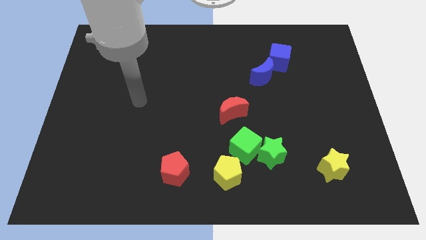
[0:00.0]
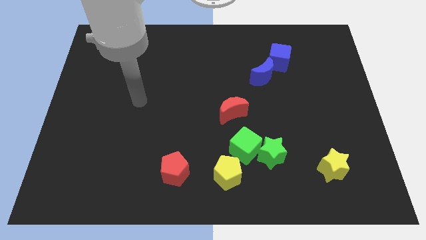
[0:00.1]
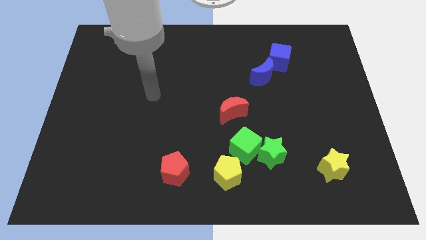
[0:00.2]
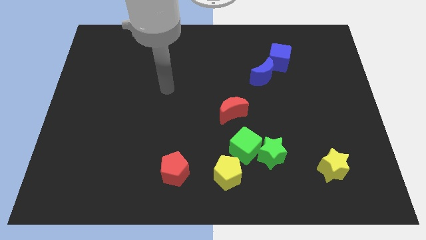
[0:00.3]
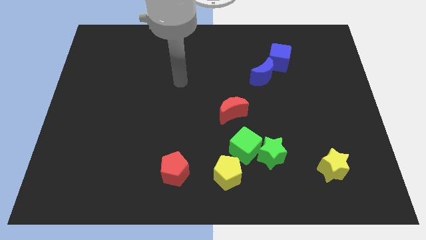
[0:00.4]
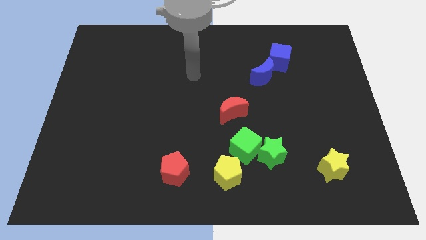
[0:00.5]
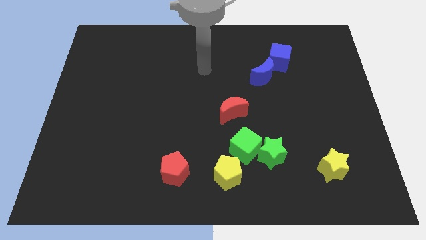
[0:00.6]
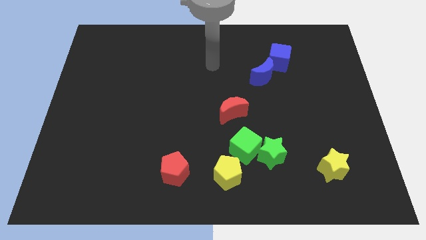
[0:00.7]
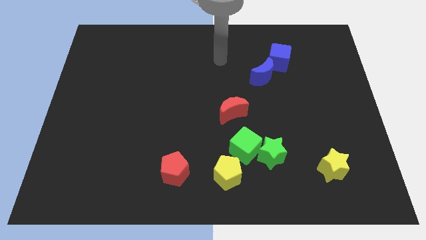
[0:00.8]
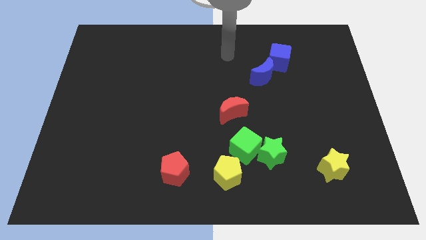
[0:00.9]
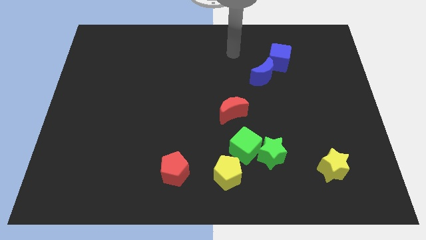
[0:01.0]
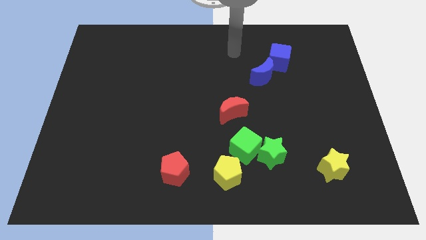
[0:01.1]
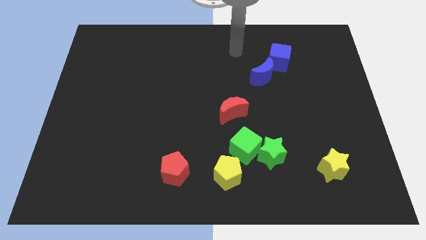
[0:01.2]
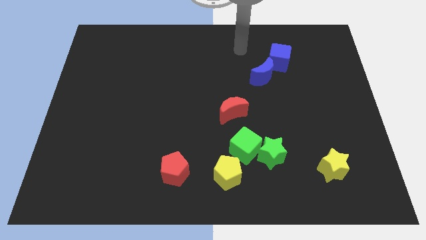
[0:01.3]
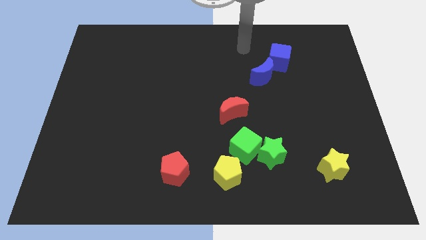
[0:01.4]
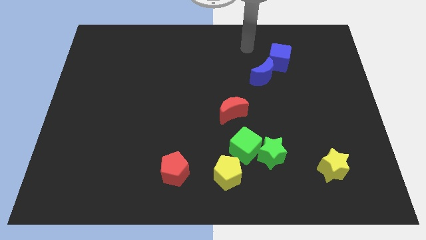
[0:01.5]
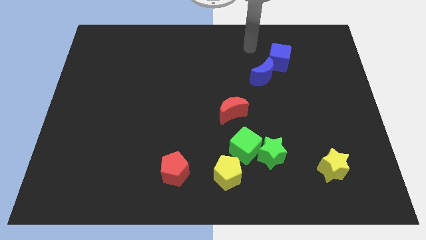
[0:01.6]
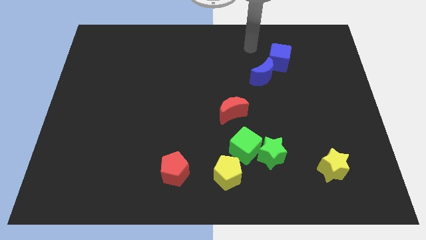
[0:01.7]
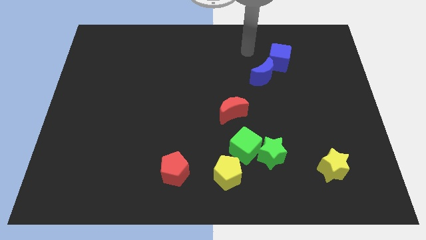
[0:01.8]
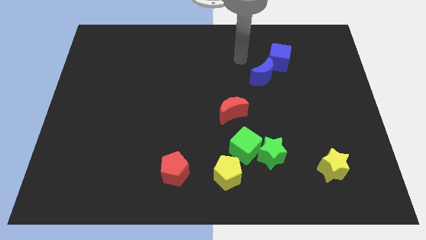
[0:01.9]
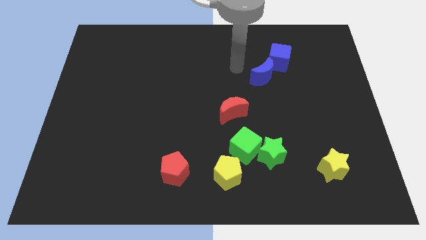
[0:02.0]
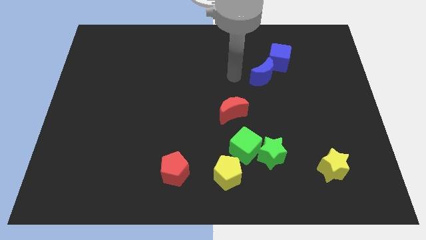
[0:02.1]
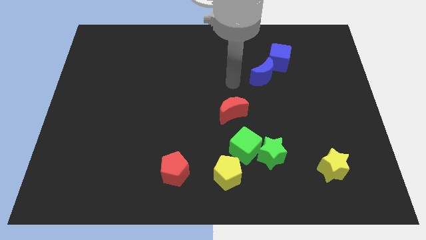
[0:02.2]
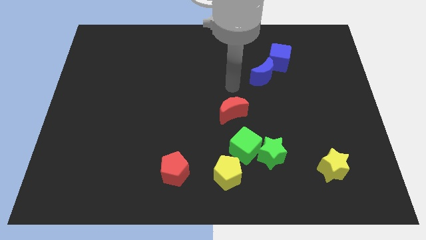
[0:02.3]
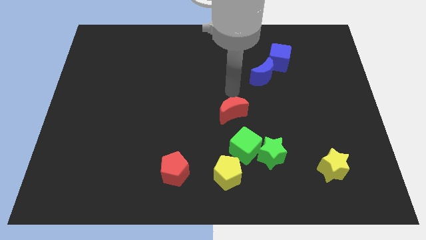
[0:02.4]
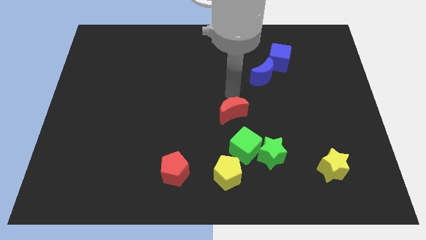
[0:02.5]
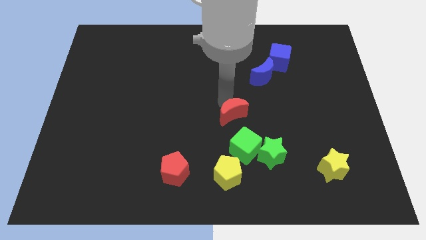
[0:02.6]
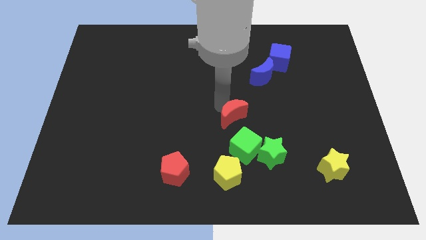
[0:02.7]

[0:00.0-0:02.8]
touch the red crescent with the arm

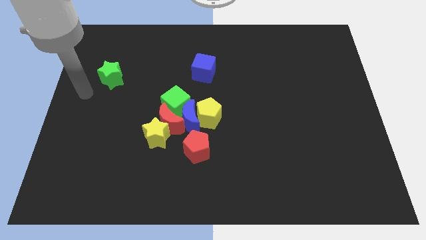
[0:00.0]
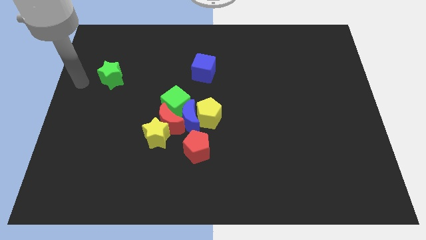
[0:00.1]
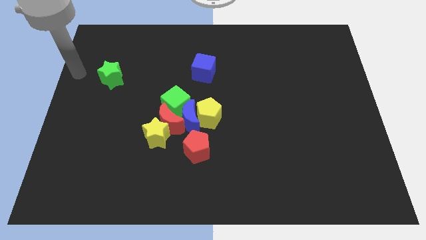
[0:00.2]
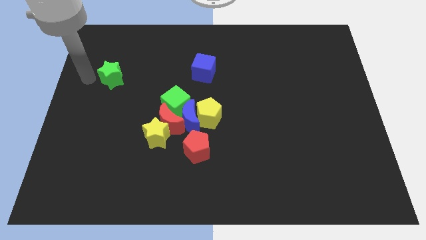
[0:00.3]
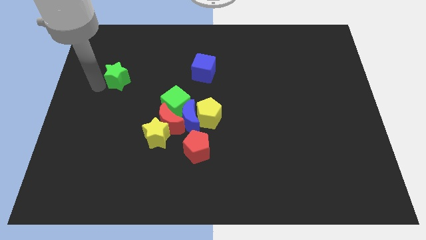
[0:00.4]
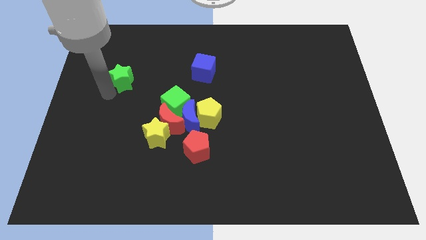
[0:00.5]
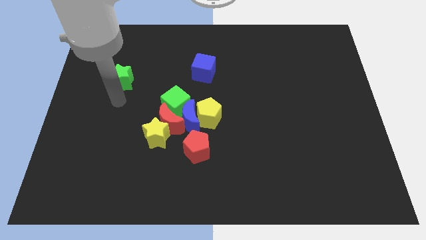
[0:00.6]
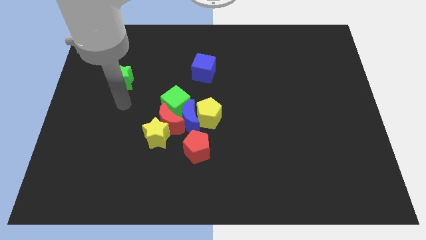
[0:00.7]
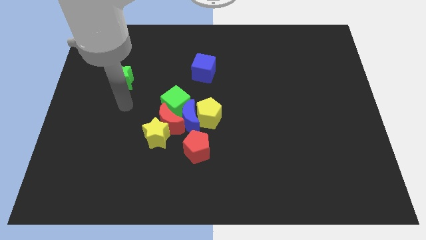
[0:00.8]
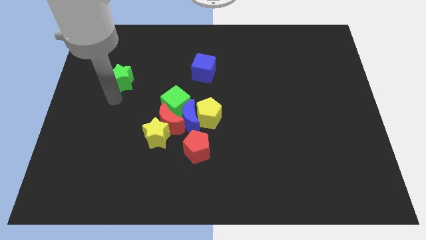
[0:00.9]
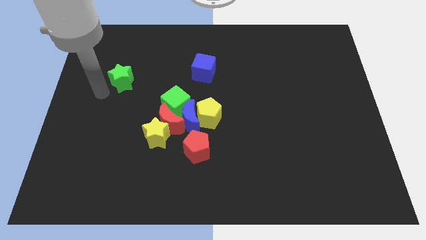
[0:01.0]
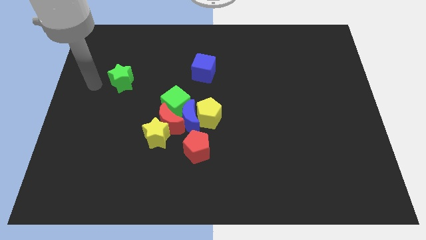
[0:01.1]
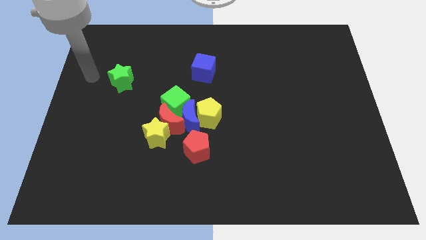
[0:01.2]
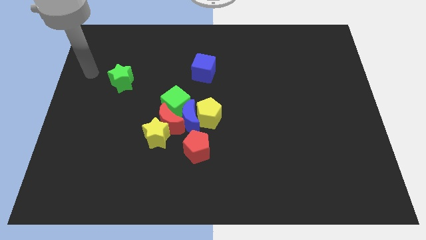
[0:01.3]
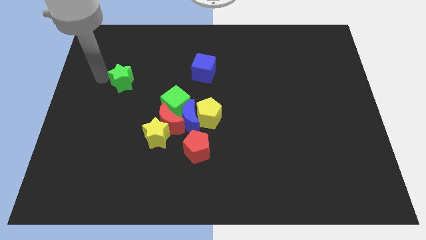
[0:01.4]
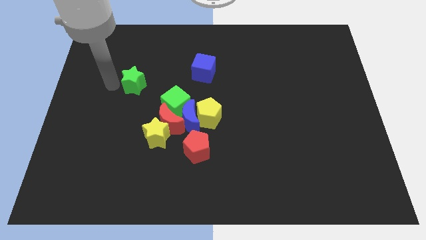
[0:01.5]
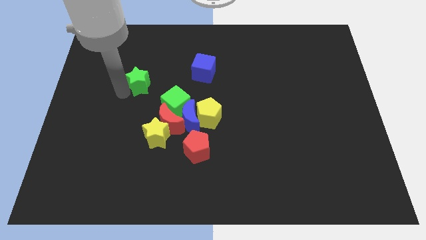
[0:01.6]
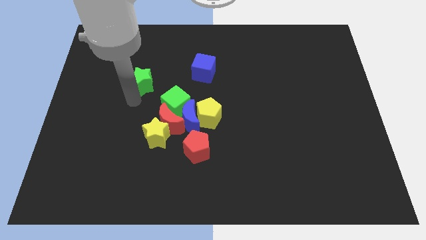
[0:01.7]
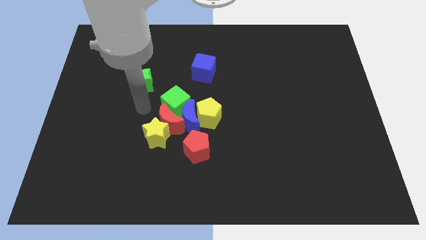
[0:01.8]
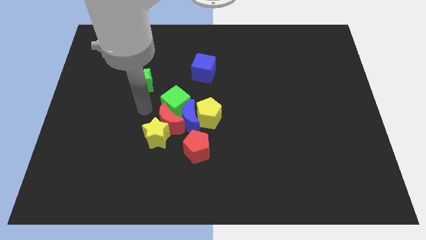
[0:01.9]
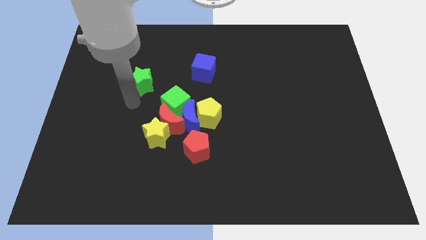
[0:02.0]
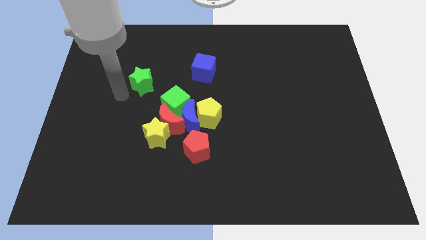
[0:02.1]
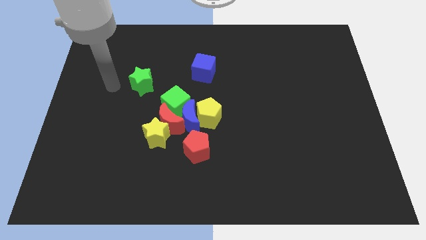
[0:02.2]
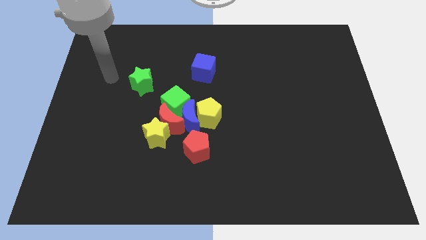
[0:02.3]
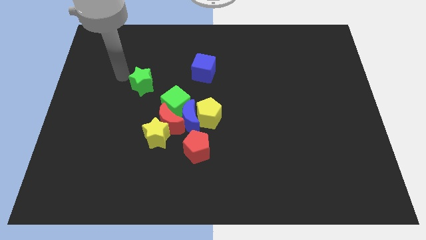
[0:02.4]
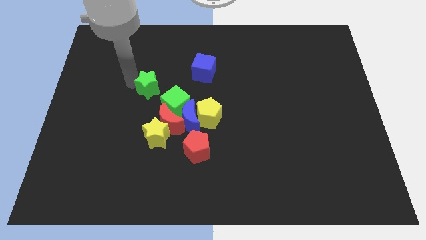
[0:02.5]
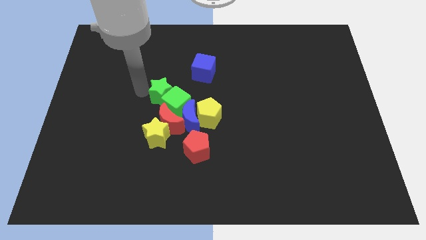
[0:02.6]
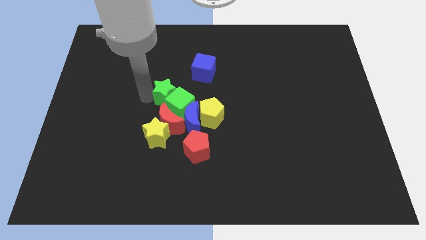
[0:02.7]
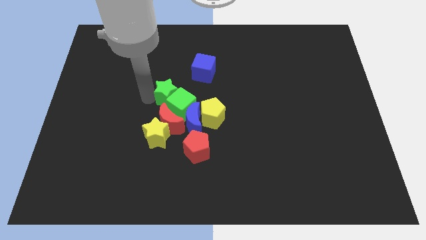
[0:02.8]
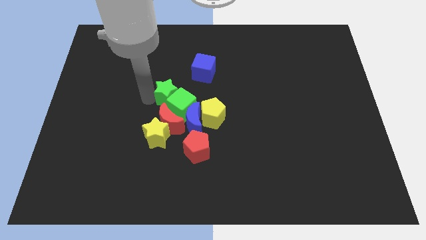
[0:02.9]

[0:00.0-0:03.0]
push the green star into the green cube

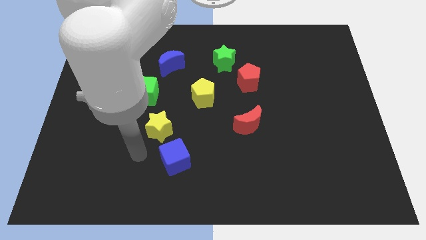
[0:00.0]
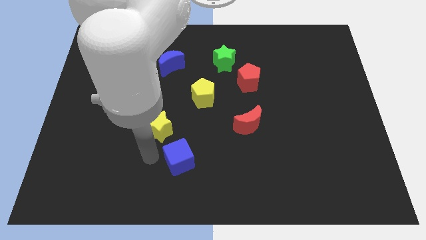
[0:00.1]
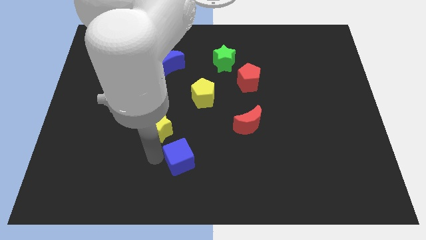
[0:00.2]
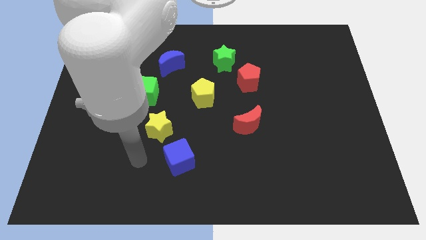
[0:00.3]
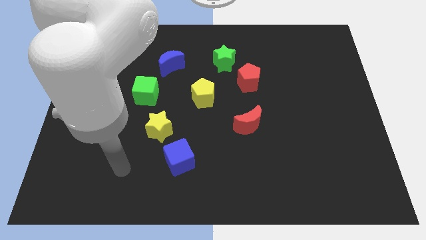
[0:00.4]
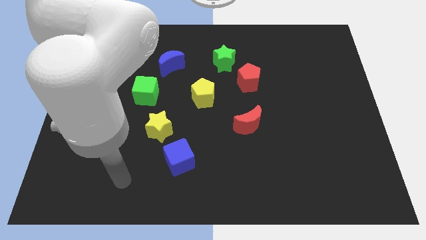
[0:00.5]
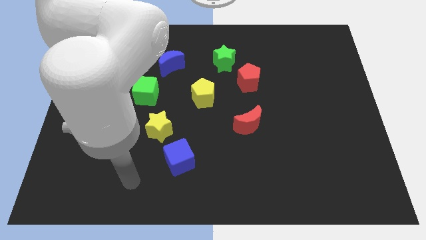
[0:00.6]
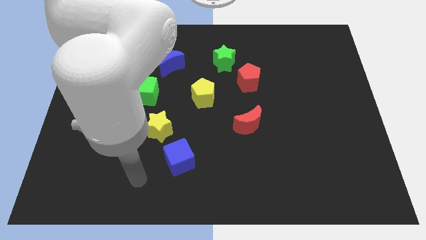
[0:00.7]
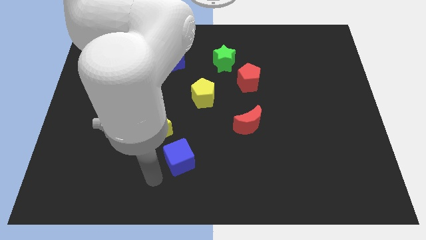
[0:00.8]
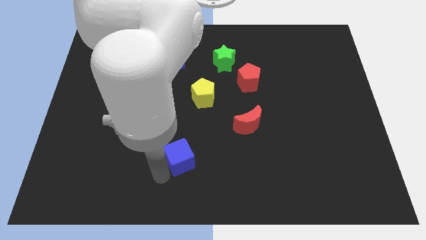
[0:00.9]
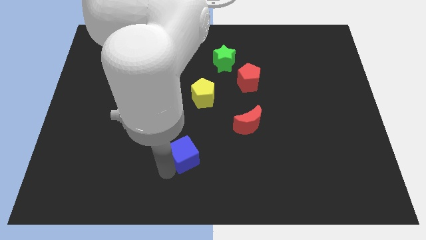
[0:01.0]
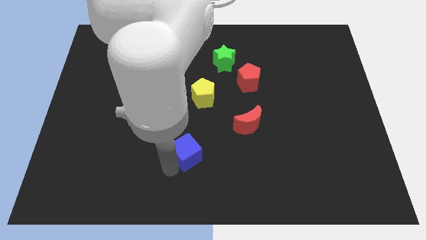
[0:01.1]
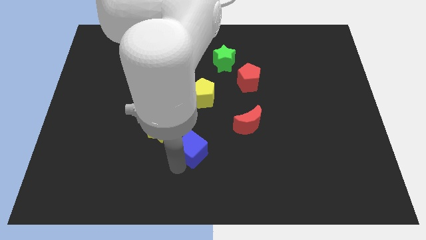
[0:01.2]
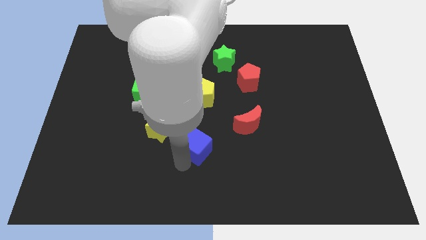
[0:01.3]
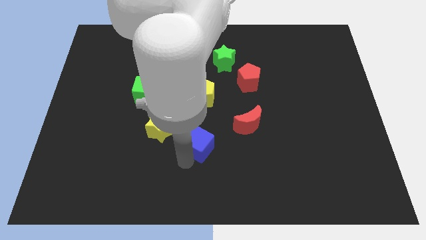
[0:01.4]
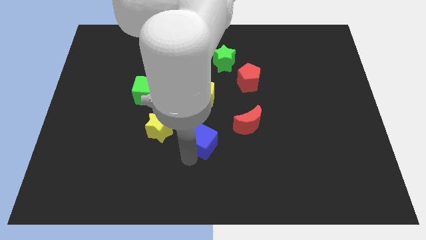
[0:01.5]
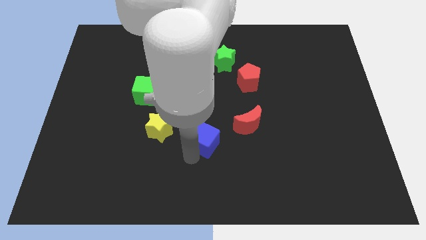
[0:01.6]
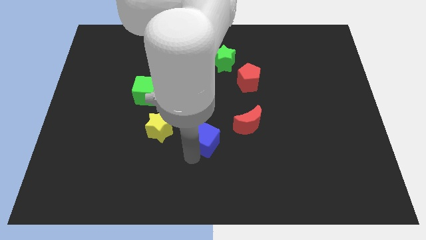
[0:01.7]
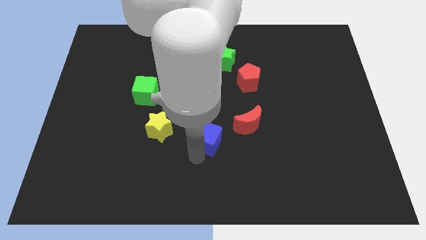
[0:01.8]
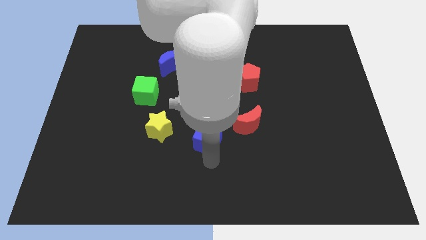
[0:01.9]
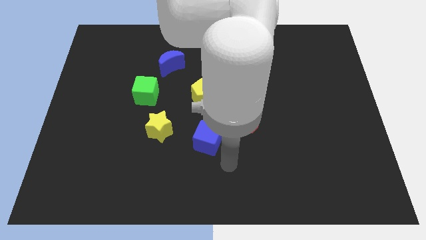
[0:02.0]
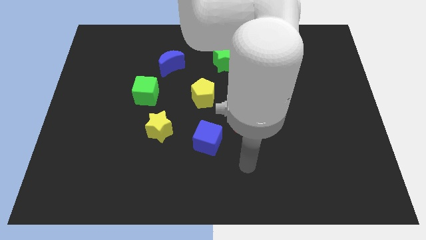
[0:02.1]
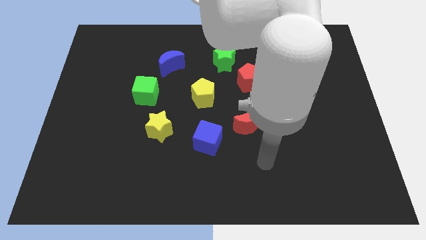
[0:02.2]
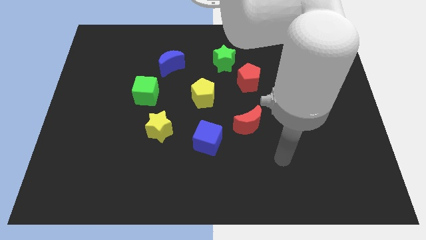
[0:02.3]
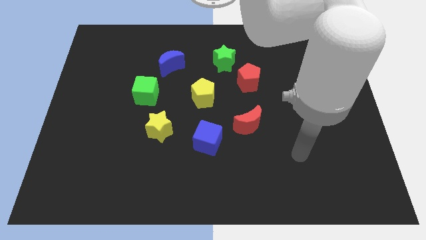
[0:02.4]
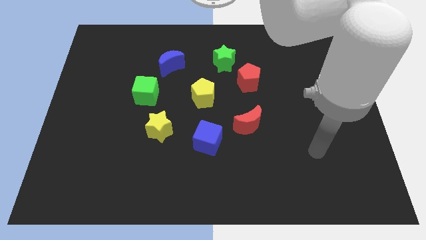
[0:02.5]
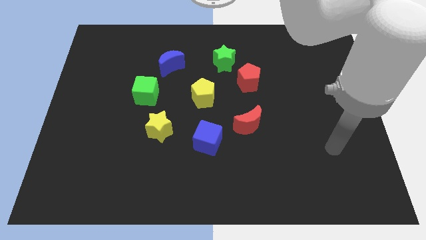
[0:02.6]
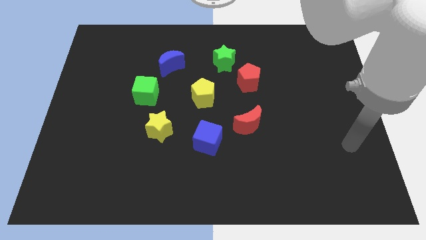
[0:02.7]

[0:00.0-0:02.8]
move the blue cube diagonally to the bottom left of the red moon

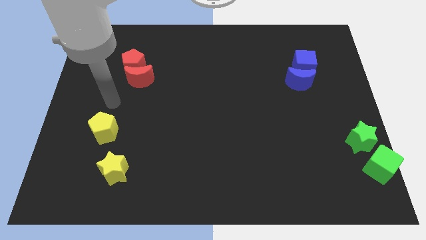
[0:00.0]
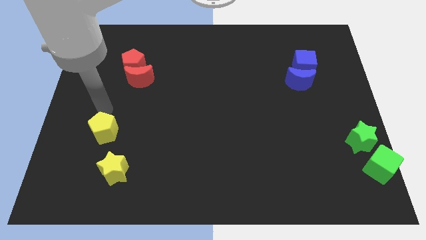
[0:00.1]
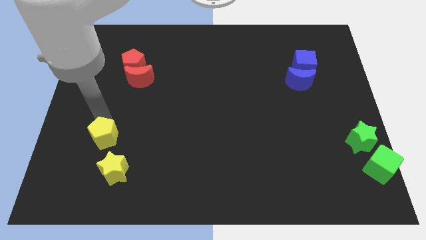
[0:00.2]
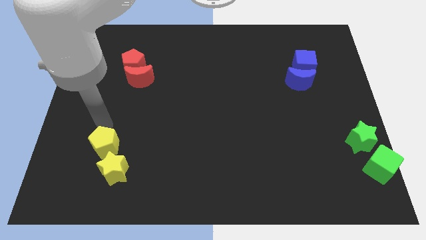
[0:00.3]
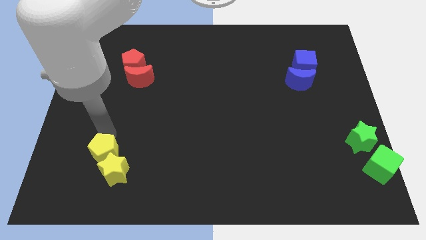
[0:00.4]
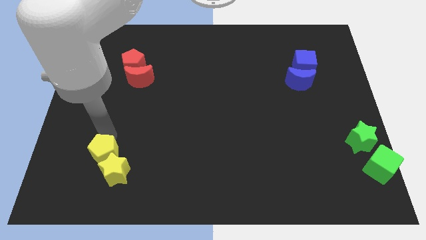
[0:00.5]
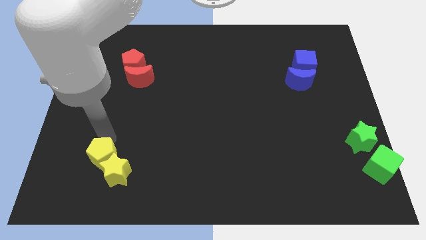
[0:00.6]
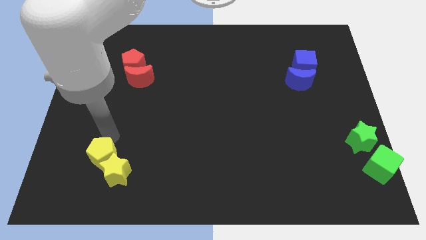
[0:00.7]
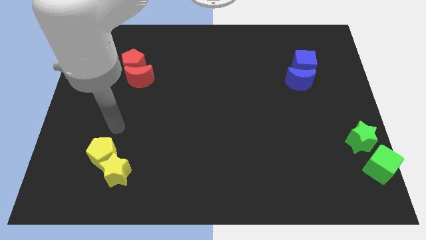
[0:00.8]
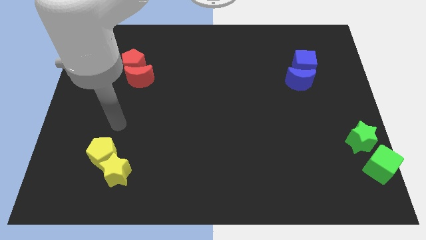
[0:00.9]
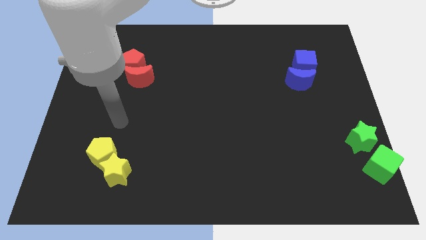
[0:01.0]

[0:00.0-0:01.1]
move the yellow pentagon into the yellow star
